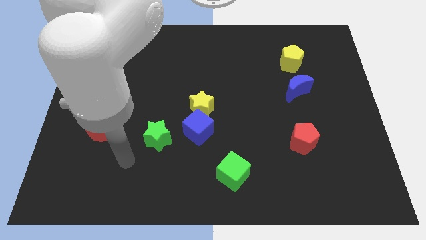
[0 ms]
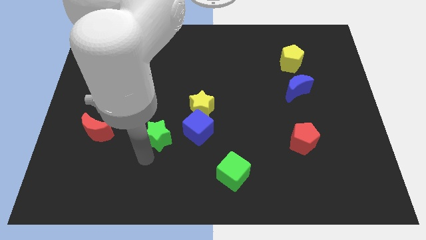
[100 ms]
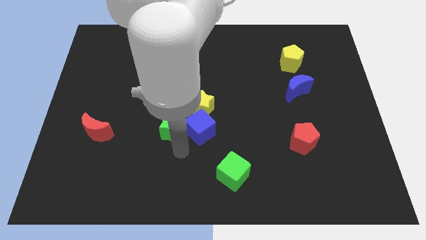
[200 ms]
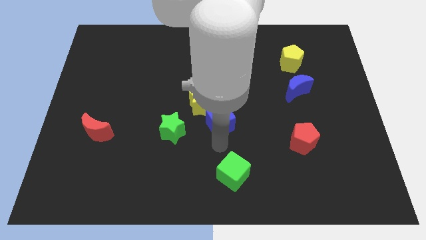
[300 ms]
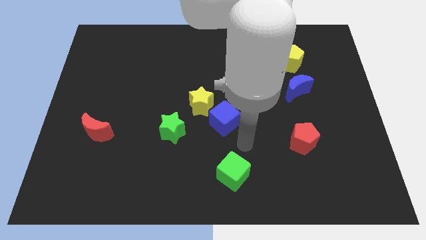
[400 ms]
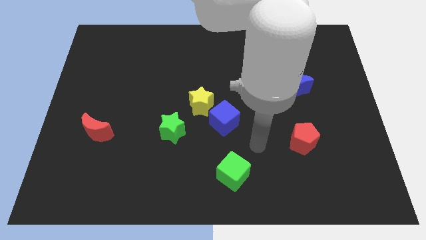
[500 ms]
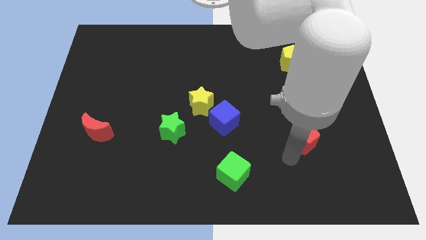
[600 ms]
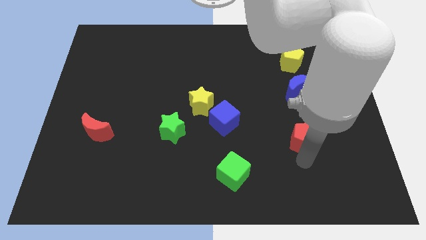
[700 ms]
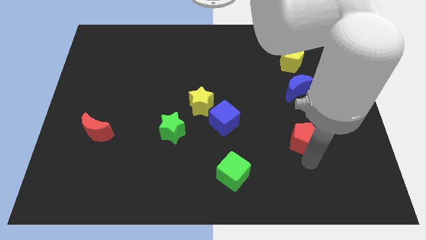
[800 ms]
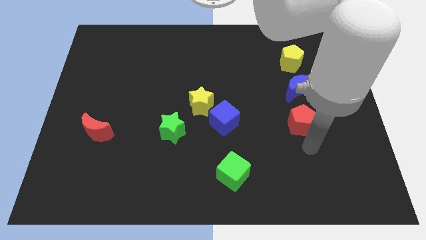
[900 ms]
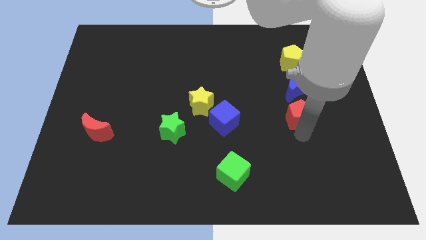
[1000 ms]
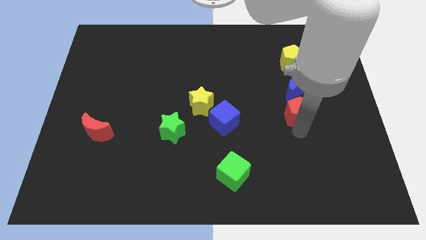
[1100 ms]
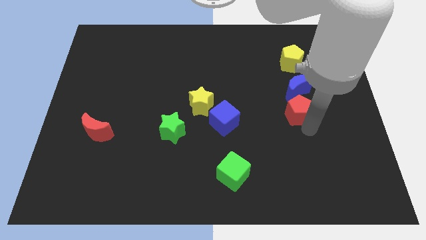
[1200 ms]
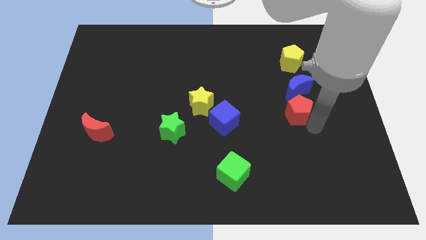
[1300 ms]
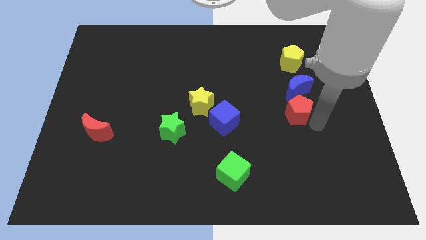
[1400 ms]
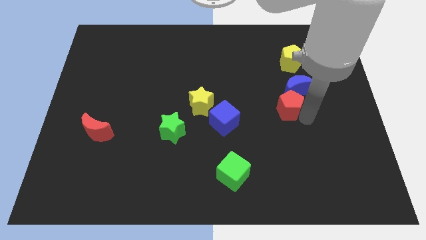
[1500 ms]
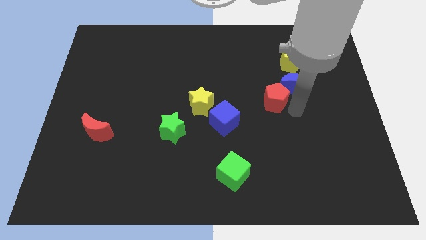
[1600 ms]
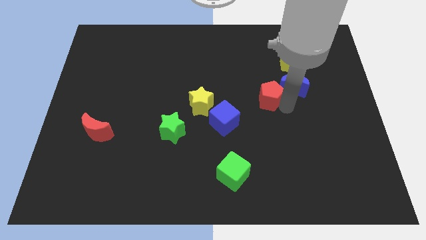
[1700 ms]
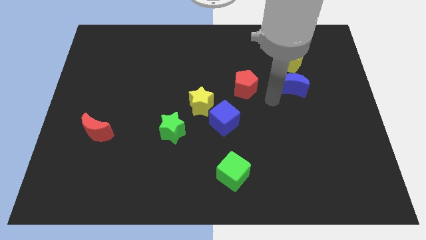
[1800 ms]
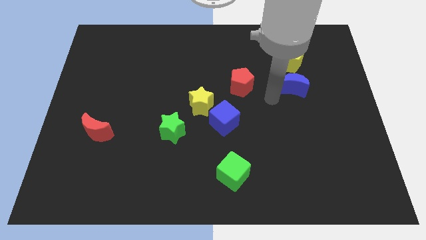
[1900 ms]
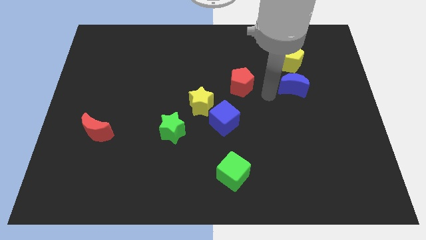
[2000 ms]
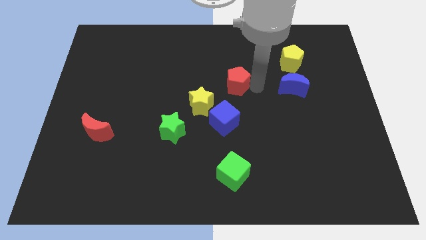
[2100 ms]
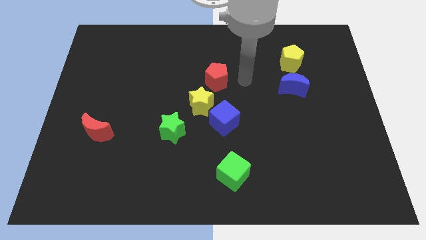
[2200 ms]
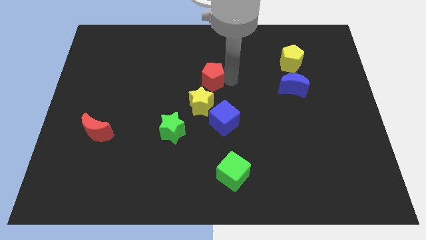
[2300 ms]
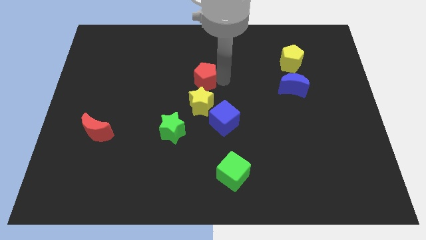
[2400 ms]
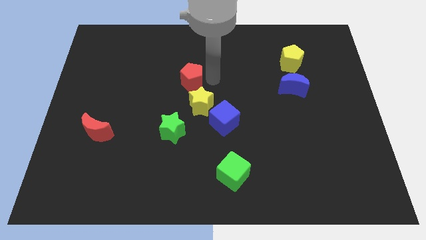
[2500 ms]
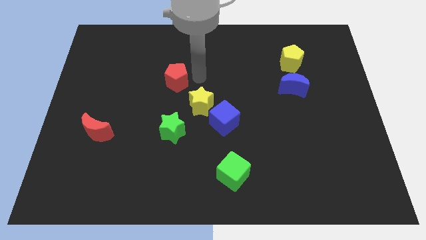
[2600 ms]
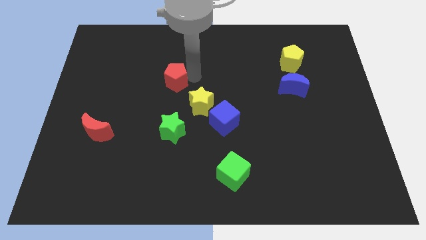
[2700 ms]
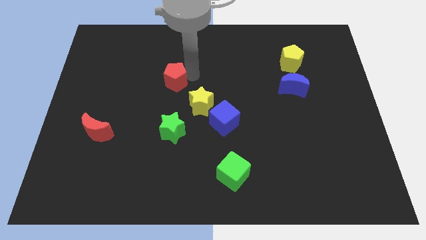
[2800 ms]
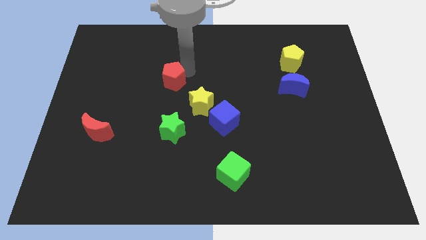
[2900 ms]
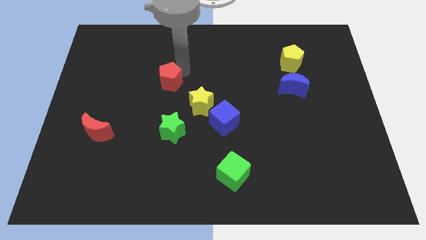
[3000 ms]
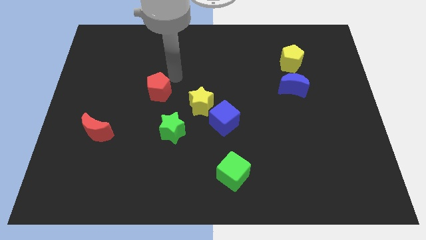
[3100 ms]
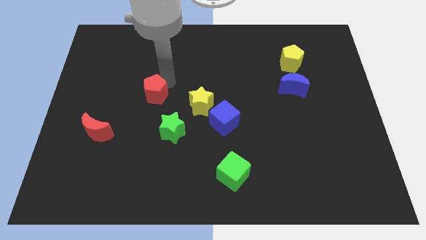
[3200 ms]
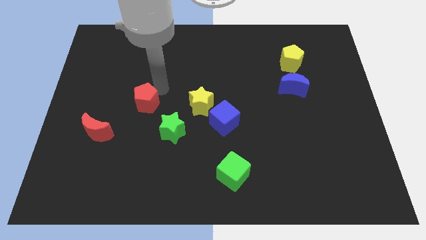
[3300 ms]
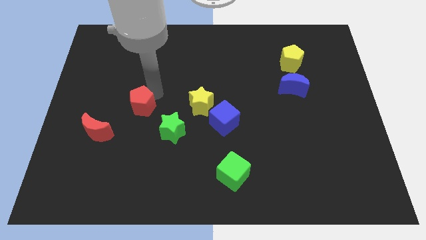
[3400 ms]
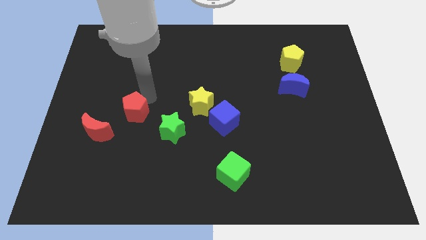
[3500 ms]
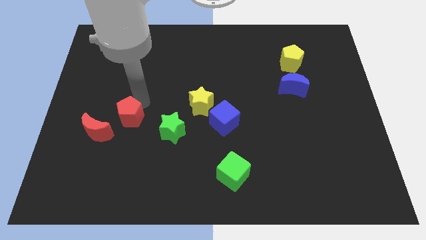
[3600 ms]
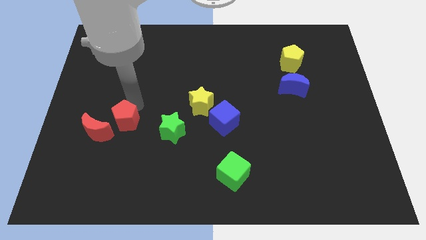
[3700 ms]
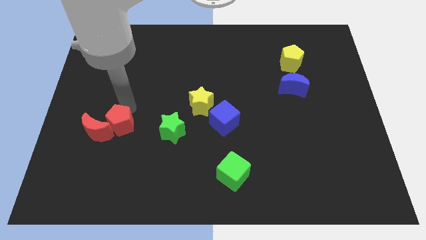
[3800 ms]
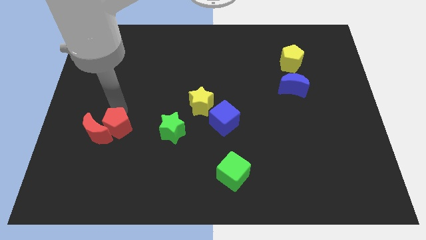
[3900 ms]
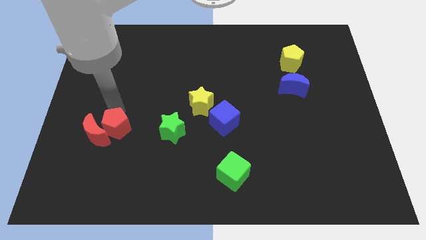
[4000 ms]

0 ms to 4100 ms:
move the red pentagon to the red moon

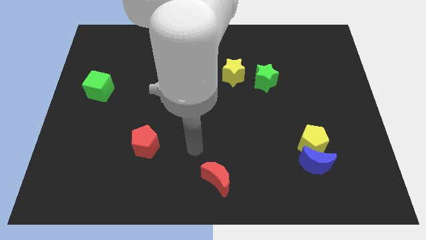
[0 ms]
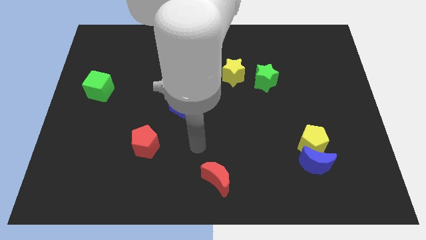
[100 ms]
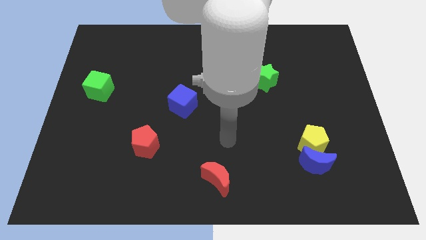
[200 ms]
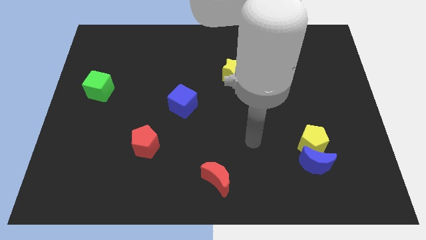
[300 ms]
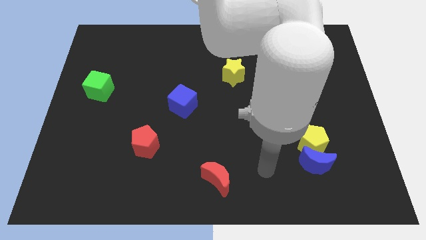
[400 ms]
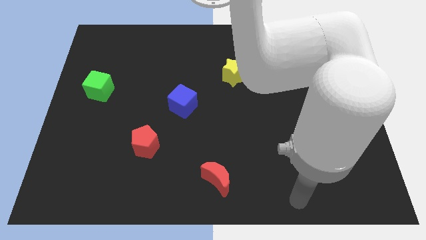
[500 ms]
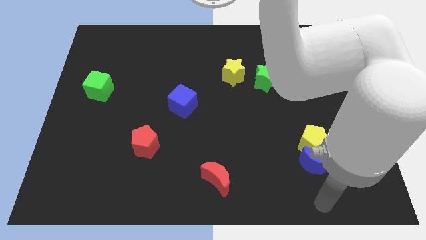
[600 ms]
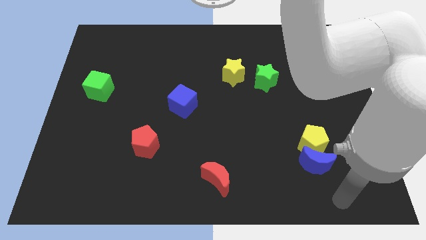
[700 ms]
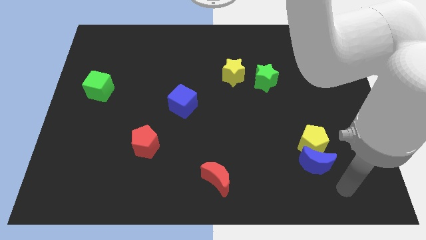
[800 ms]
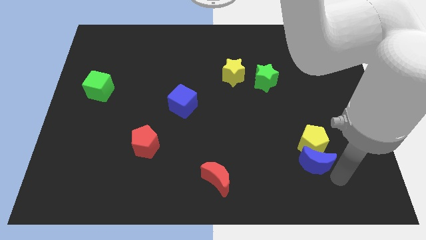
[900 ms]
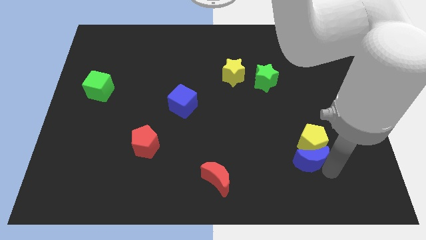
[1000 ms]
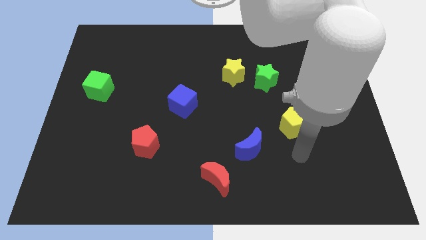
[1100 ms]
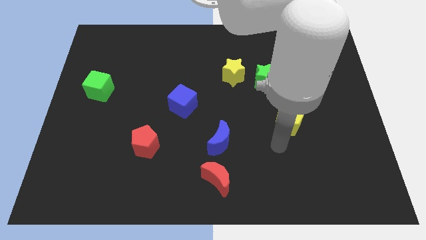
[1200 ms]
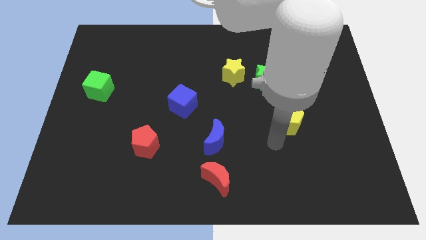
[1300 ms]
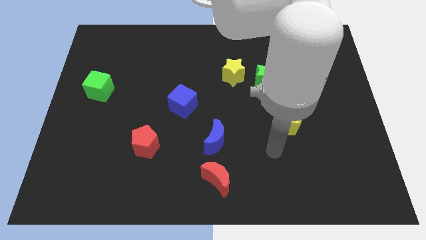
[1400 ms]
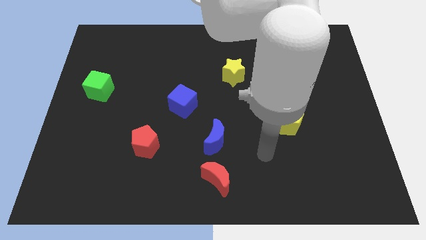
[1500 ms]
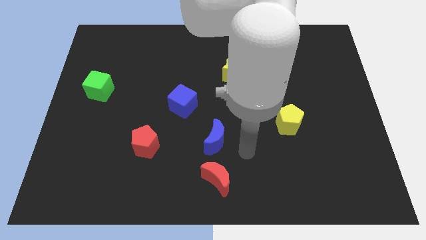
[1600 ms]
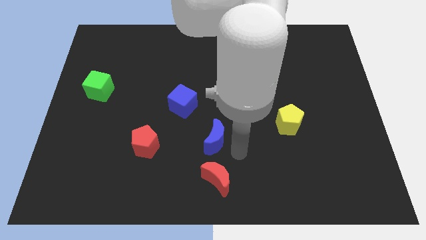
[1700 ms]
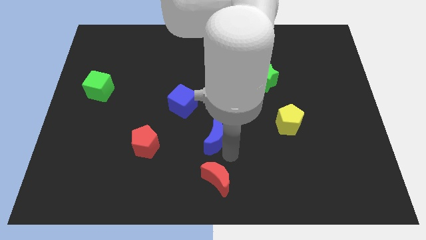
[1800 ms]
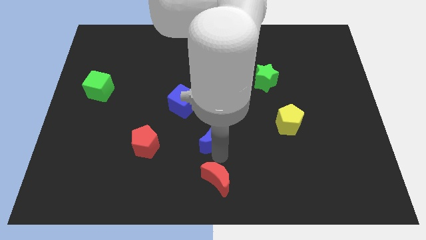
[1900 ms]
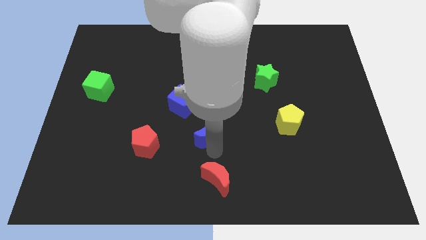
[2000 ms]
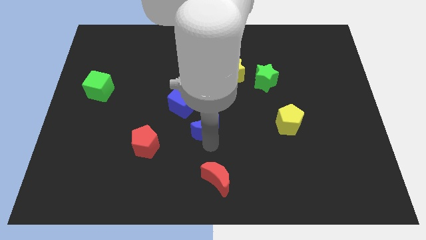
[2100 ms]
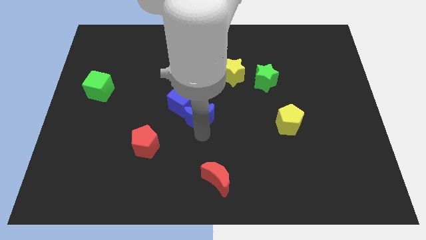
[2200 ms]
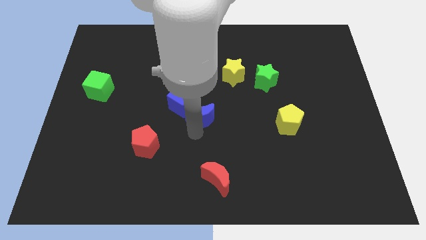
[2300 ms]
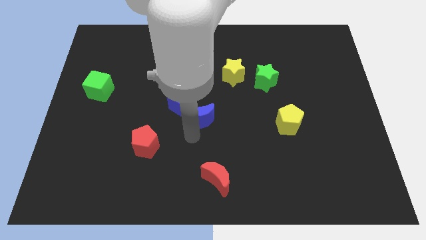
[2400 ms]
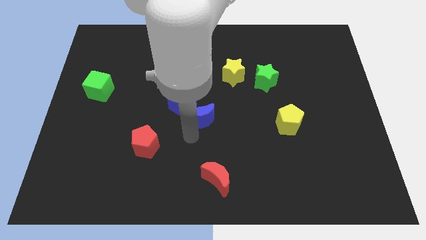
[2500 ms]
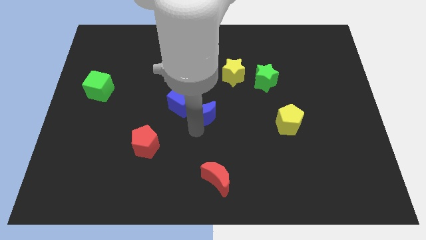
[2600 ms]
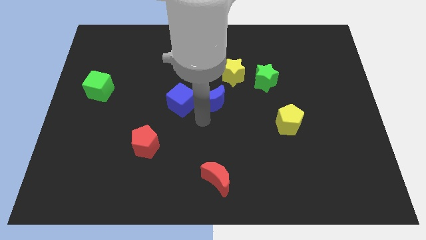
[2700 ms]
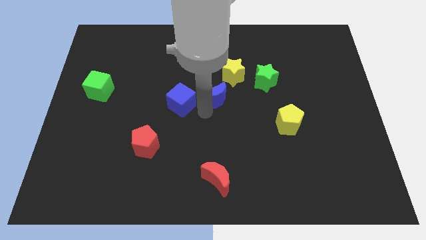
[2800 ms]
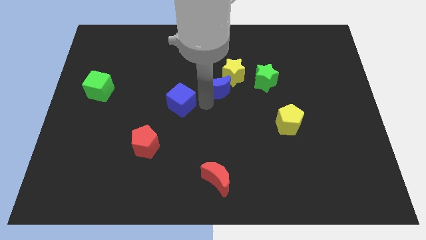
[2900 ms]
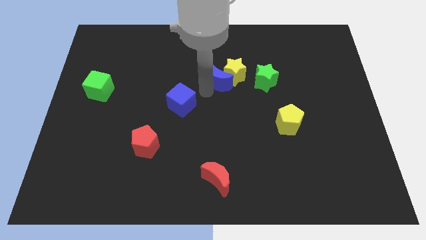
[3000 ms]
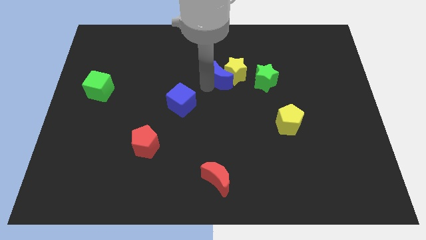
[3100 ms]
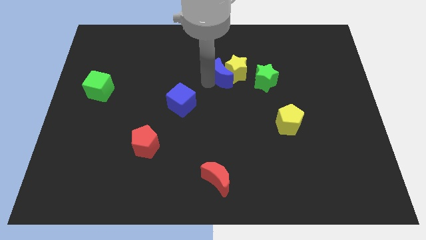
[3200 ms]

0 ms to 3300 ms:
slide the blue moon next to the yellow star

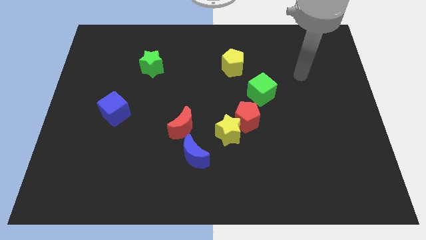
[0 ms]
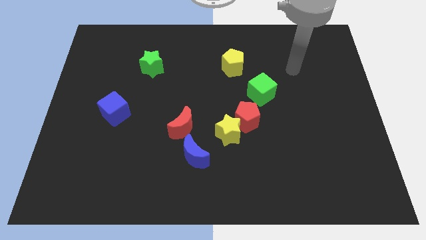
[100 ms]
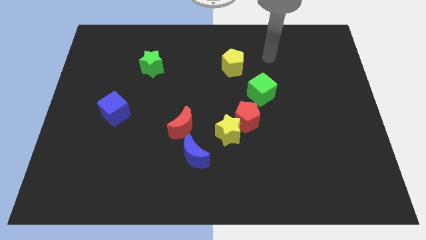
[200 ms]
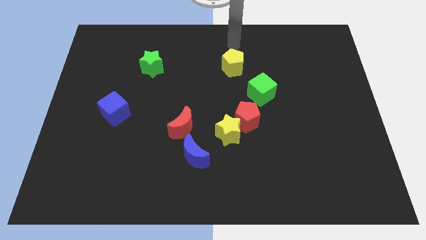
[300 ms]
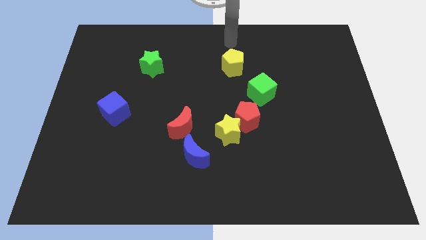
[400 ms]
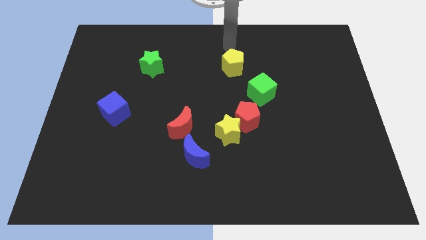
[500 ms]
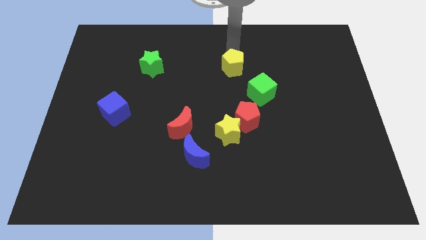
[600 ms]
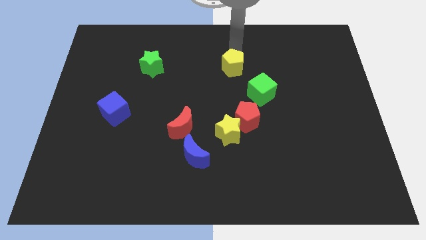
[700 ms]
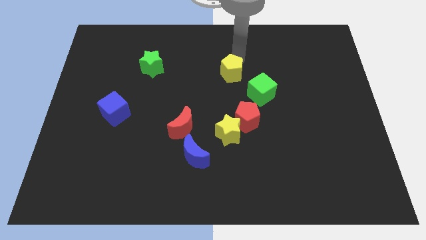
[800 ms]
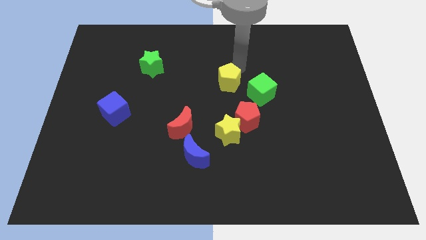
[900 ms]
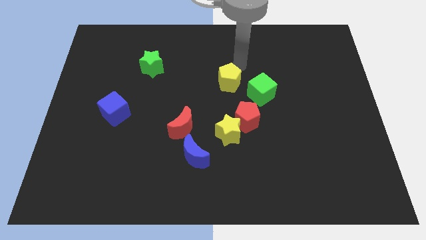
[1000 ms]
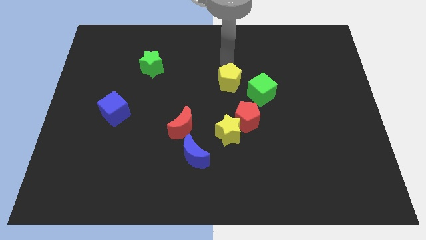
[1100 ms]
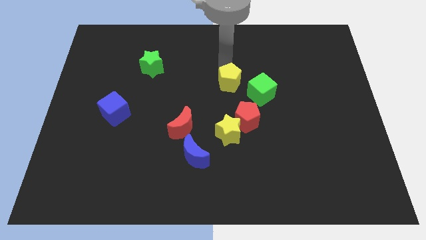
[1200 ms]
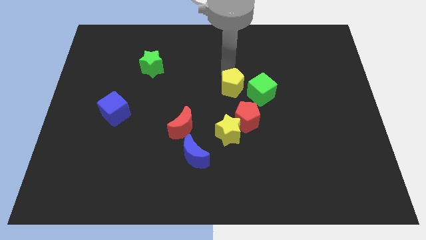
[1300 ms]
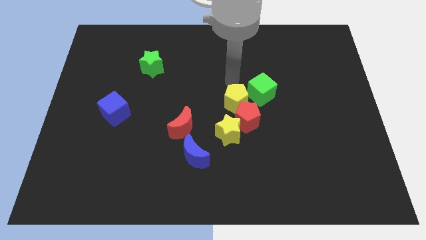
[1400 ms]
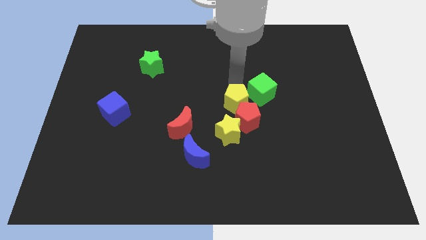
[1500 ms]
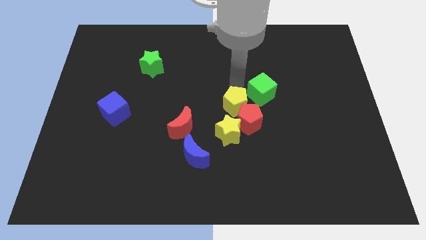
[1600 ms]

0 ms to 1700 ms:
push the yellow pentagon to the red pentagon
